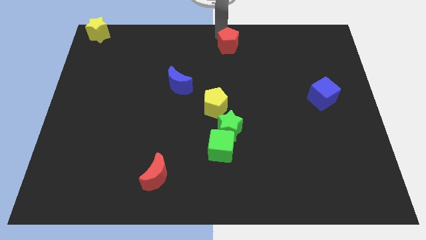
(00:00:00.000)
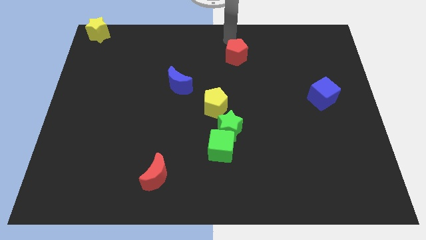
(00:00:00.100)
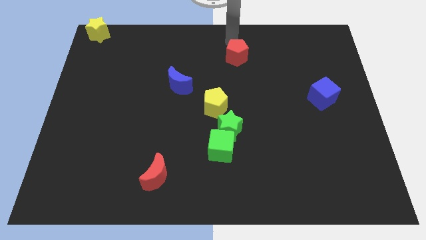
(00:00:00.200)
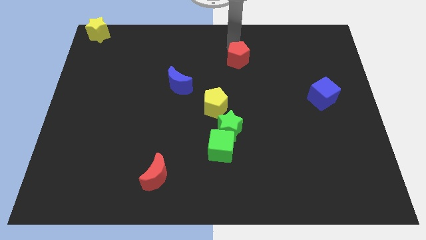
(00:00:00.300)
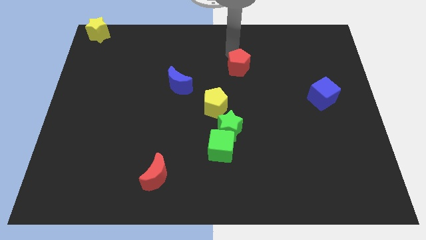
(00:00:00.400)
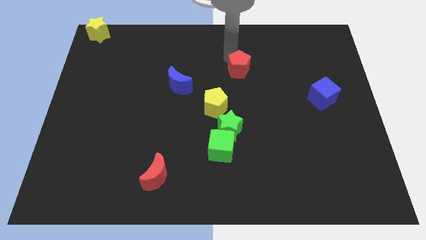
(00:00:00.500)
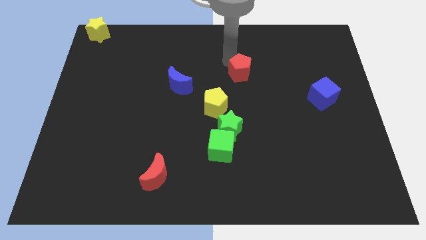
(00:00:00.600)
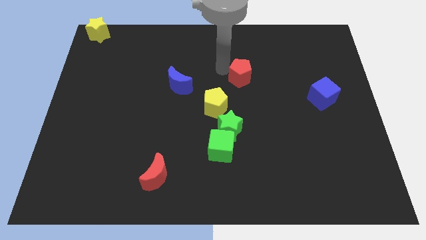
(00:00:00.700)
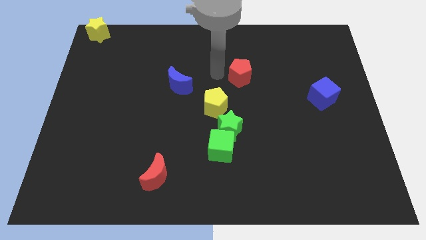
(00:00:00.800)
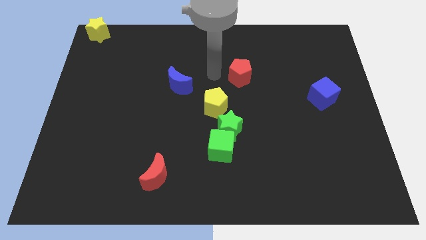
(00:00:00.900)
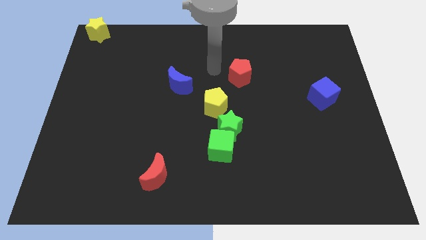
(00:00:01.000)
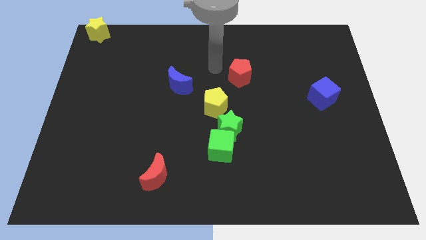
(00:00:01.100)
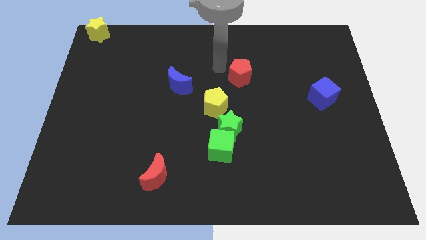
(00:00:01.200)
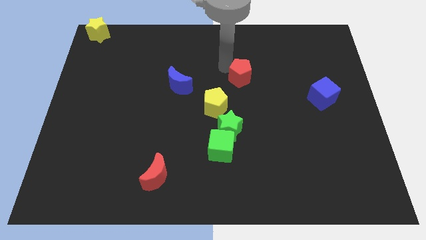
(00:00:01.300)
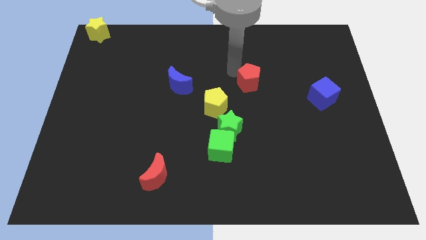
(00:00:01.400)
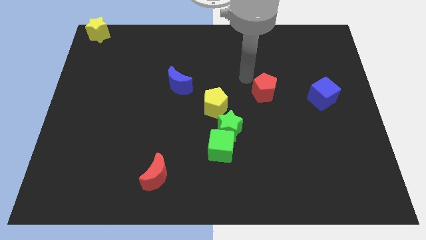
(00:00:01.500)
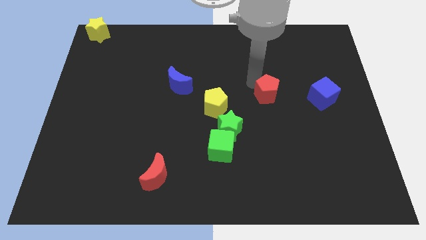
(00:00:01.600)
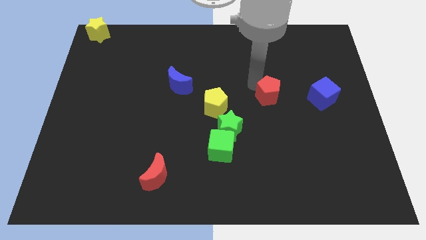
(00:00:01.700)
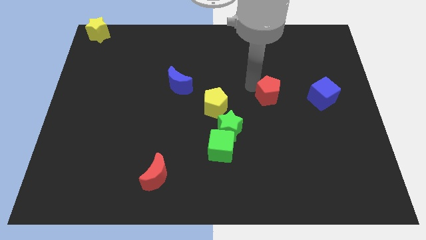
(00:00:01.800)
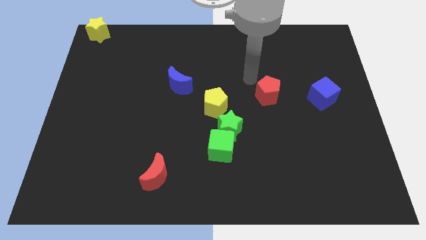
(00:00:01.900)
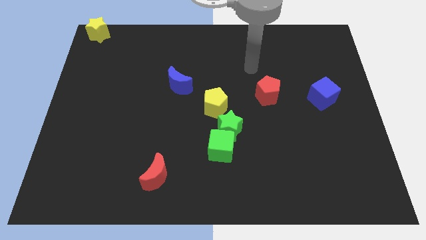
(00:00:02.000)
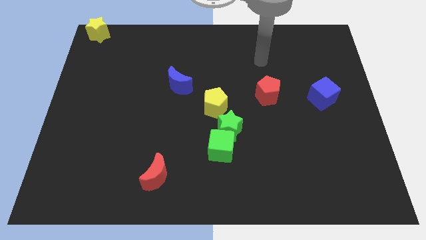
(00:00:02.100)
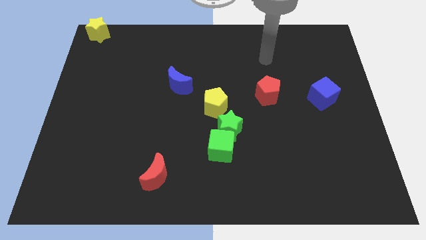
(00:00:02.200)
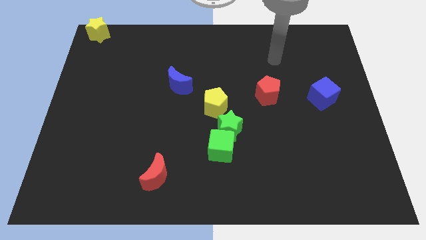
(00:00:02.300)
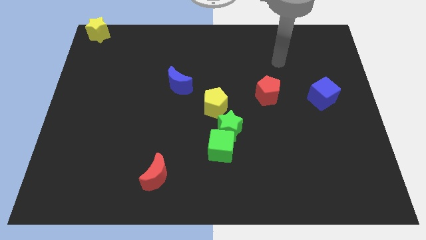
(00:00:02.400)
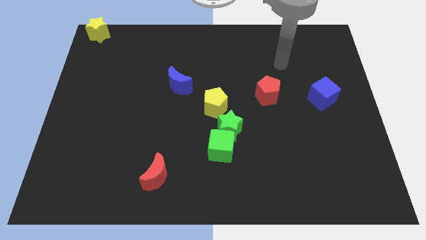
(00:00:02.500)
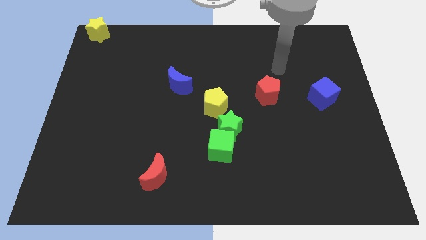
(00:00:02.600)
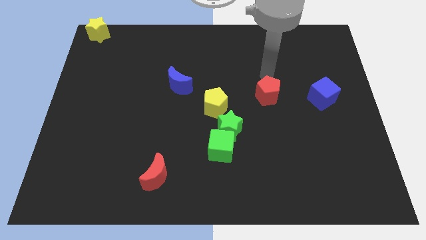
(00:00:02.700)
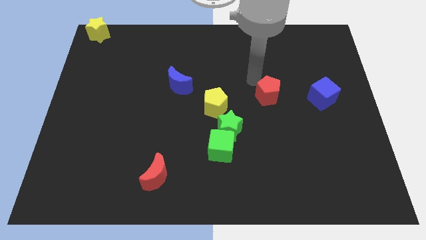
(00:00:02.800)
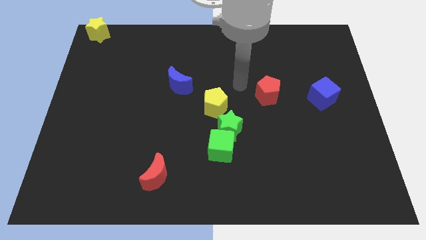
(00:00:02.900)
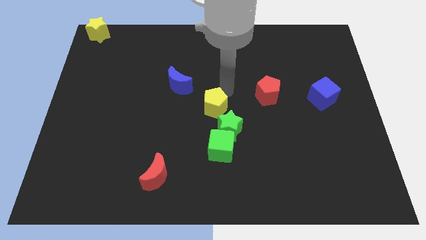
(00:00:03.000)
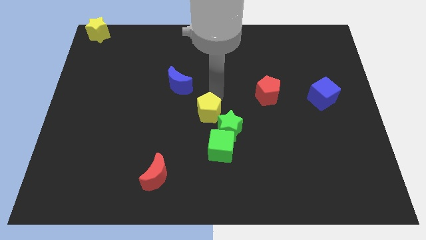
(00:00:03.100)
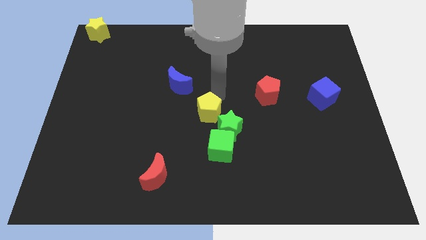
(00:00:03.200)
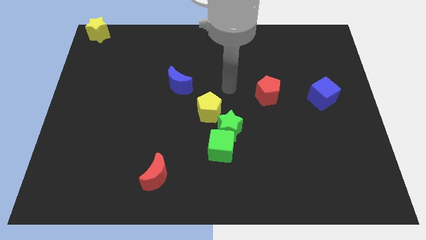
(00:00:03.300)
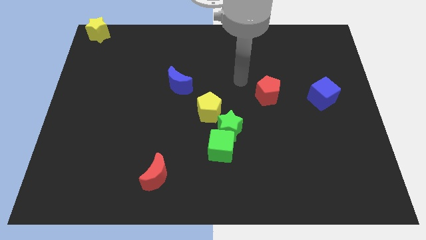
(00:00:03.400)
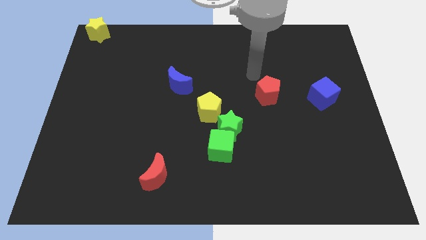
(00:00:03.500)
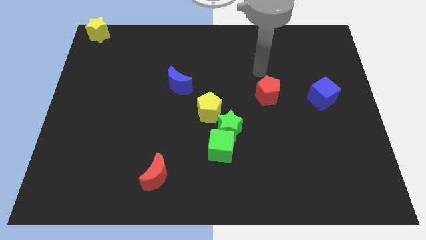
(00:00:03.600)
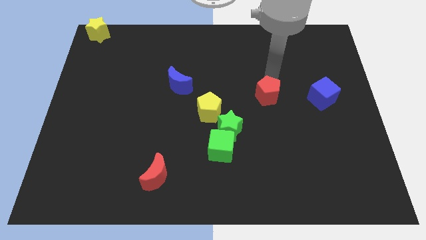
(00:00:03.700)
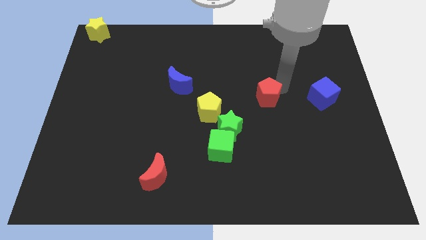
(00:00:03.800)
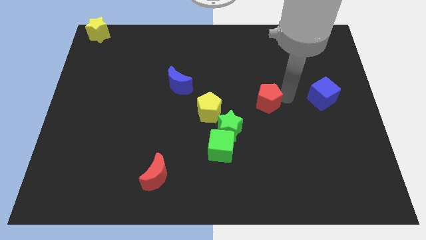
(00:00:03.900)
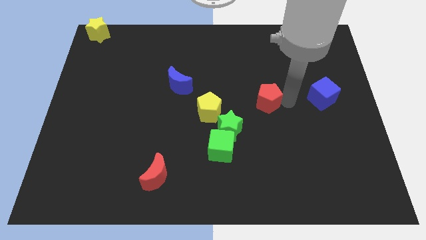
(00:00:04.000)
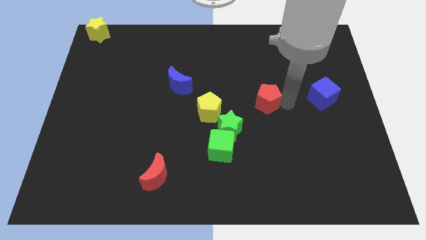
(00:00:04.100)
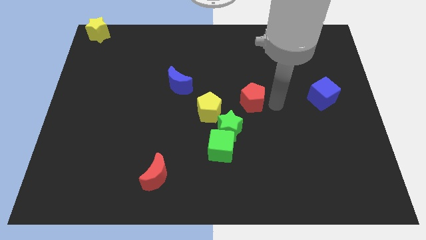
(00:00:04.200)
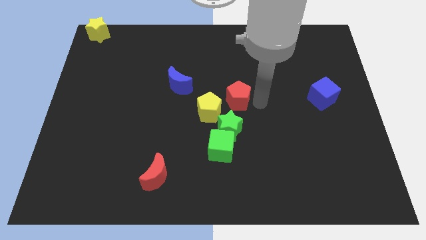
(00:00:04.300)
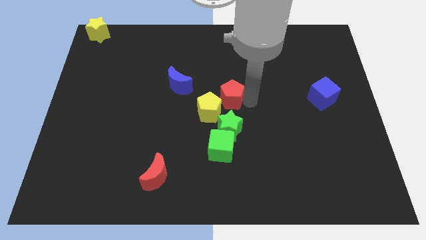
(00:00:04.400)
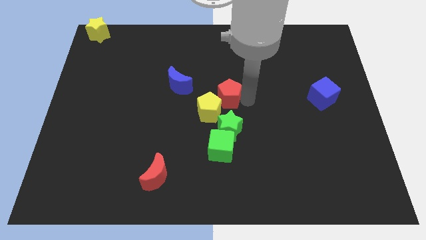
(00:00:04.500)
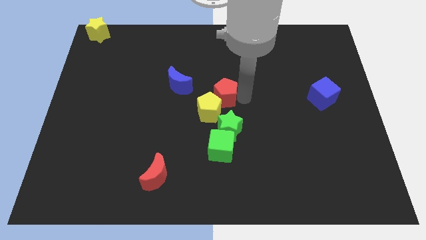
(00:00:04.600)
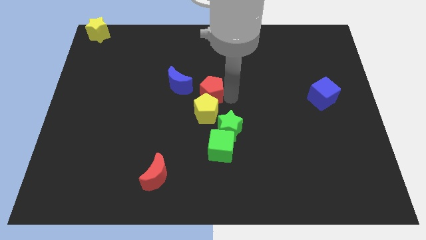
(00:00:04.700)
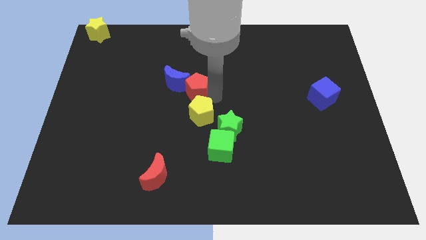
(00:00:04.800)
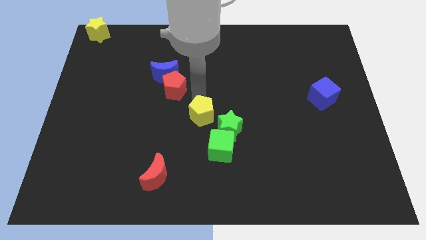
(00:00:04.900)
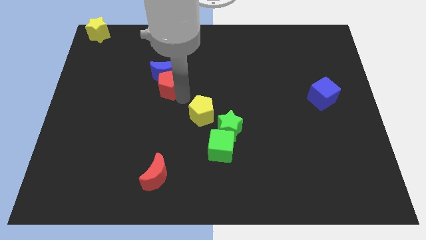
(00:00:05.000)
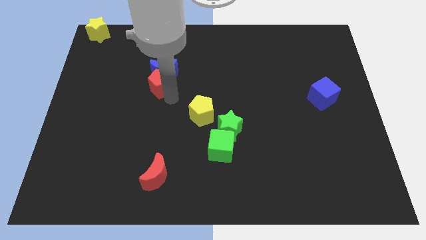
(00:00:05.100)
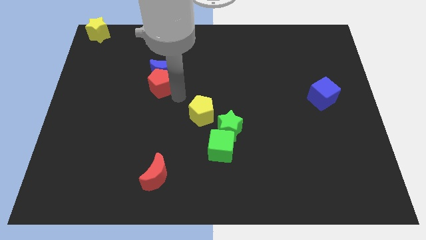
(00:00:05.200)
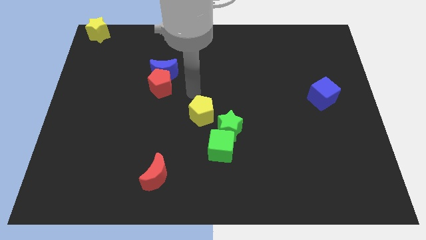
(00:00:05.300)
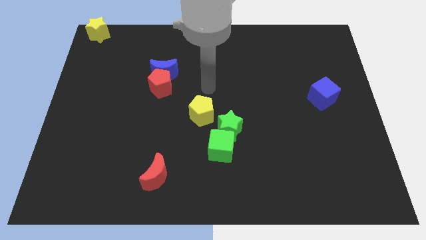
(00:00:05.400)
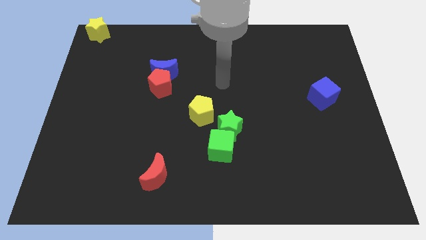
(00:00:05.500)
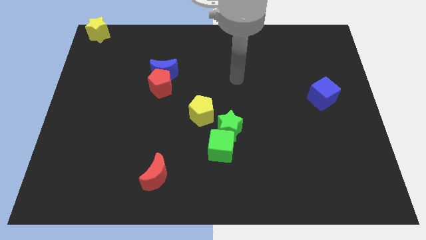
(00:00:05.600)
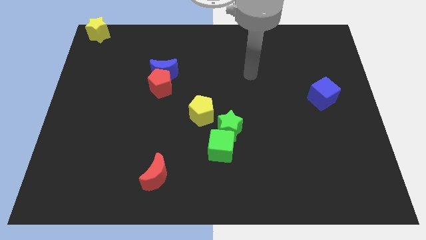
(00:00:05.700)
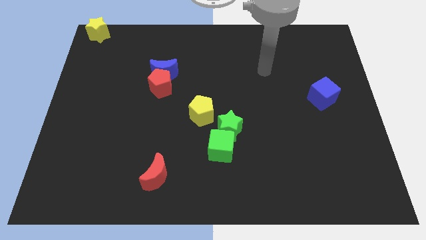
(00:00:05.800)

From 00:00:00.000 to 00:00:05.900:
push the red pentagon into the blue moon

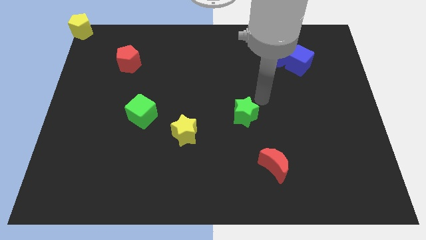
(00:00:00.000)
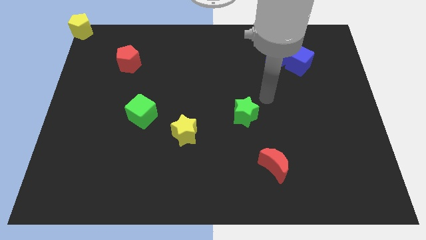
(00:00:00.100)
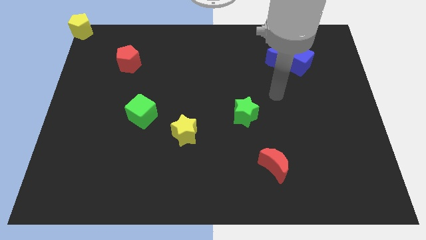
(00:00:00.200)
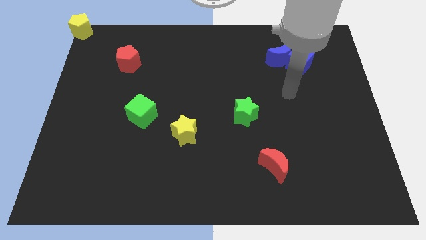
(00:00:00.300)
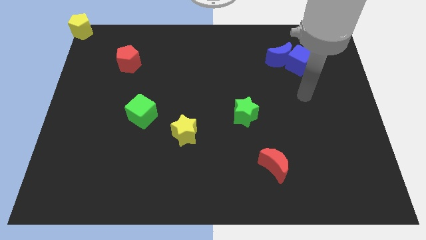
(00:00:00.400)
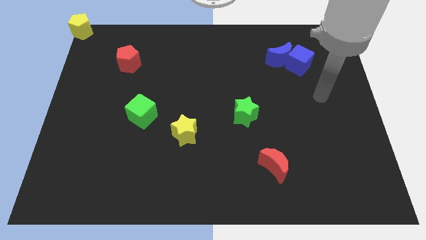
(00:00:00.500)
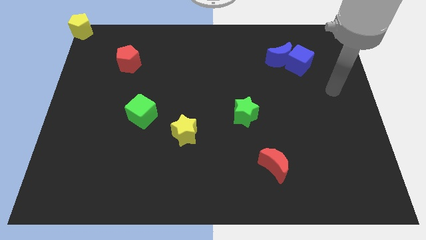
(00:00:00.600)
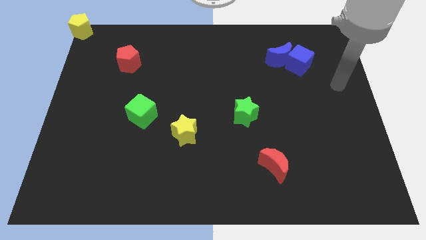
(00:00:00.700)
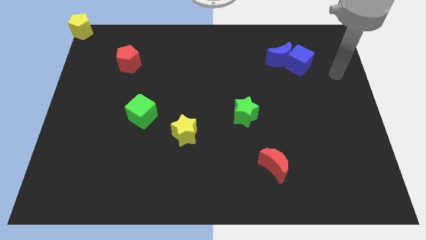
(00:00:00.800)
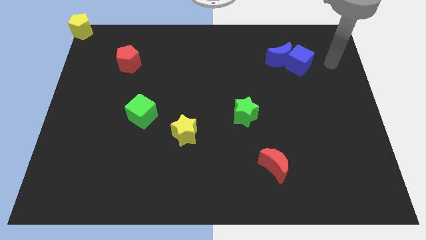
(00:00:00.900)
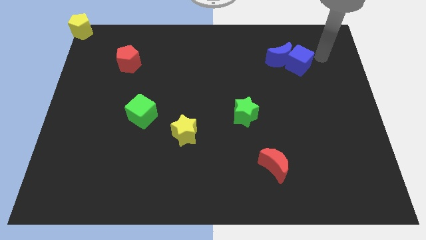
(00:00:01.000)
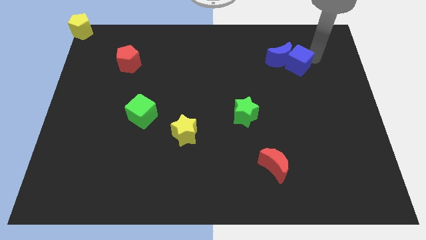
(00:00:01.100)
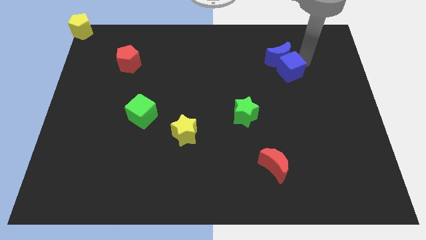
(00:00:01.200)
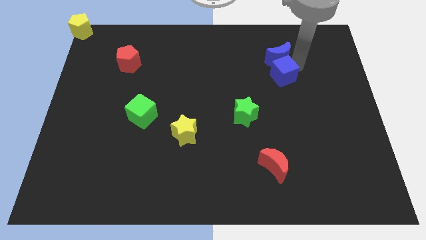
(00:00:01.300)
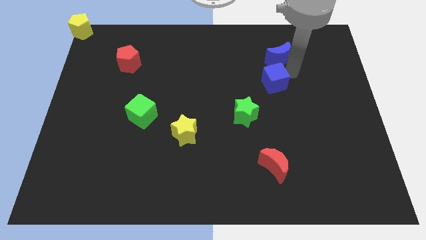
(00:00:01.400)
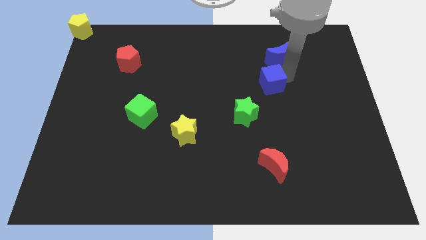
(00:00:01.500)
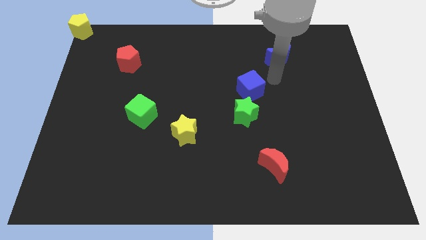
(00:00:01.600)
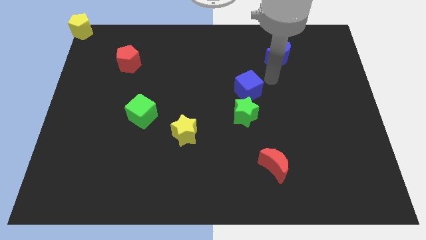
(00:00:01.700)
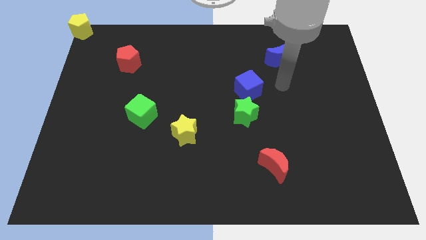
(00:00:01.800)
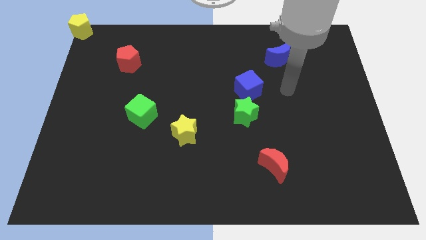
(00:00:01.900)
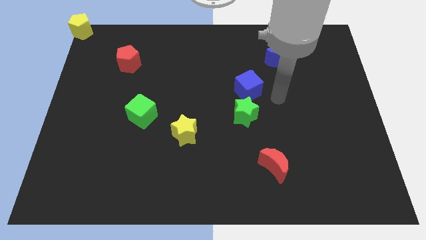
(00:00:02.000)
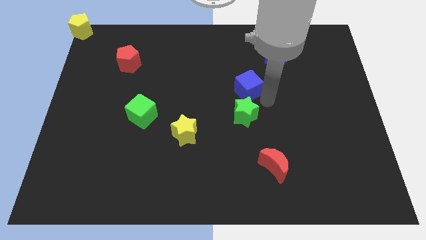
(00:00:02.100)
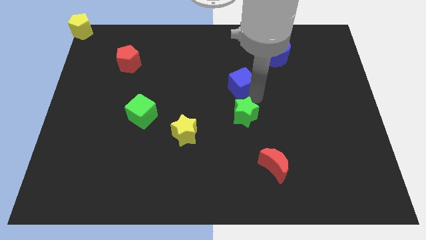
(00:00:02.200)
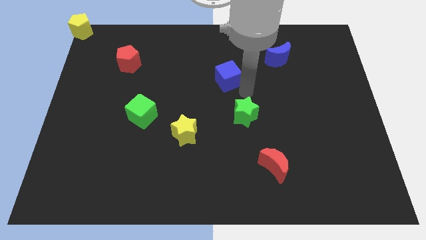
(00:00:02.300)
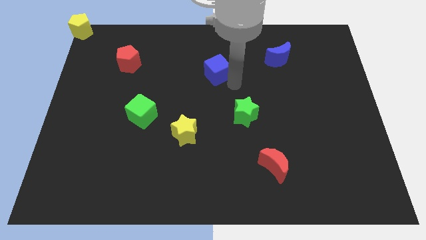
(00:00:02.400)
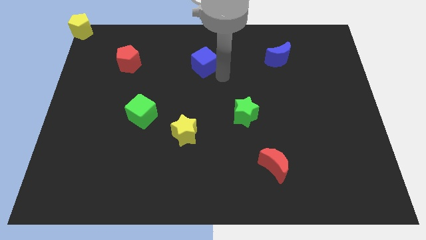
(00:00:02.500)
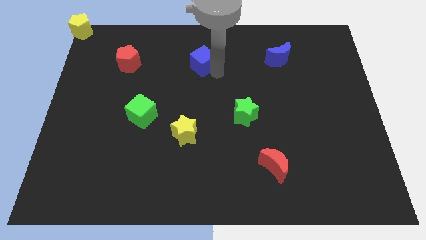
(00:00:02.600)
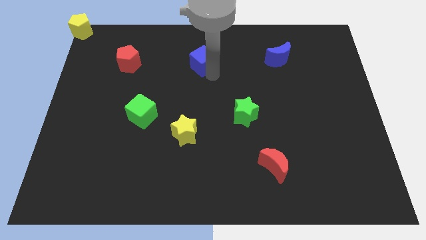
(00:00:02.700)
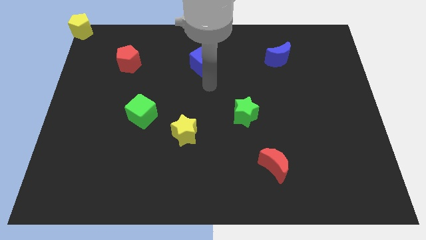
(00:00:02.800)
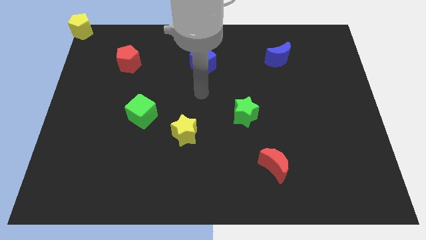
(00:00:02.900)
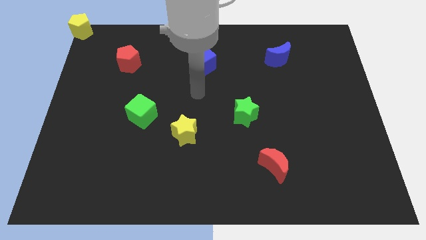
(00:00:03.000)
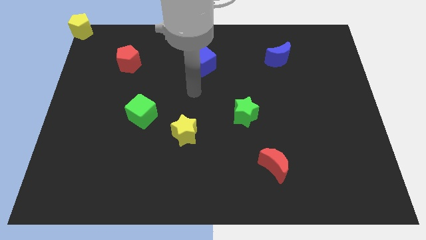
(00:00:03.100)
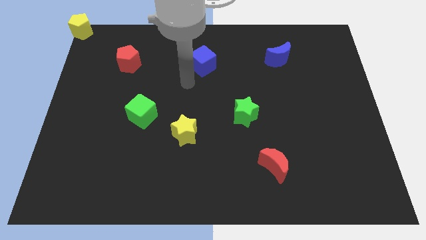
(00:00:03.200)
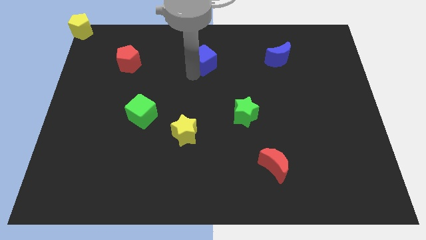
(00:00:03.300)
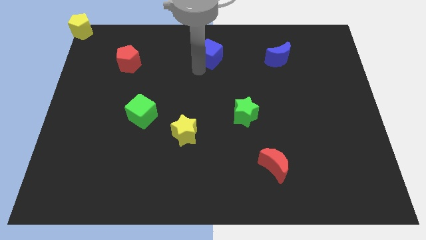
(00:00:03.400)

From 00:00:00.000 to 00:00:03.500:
put the blue cube in between the blue moon and red pentagon
